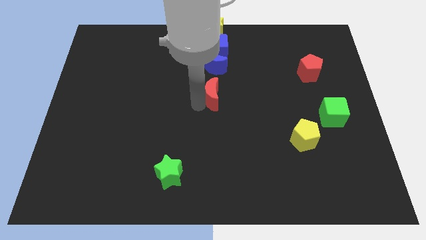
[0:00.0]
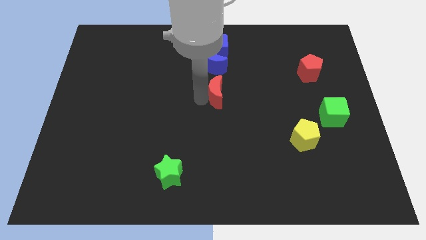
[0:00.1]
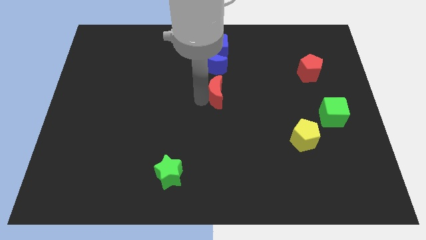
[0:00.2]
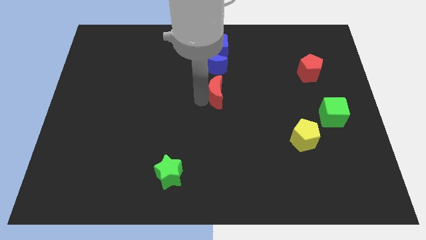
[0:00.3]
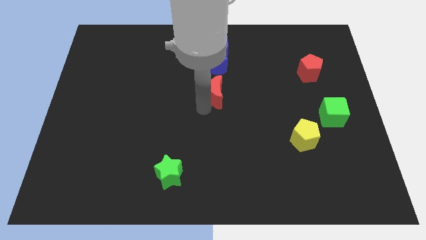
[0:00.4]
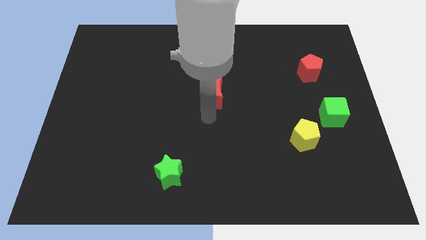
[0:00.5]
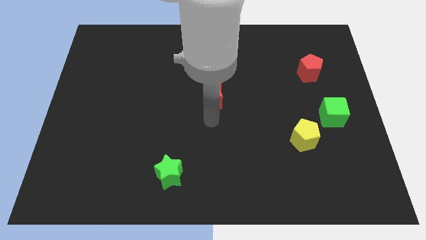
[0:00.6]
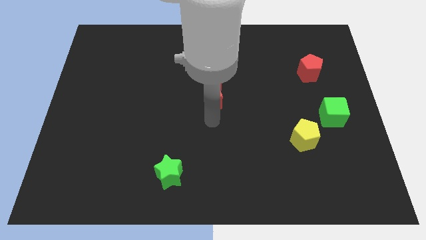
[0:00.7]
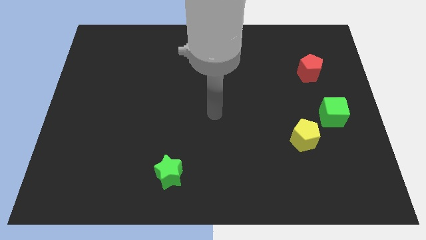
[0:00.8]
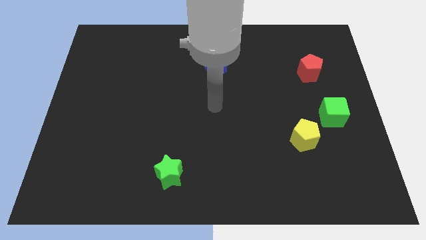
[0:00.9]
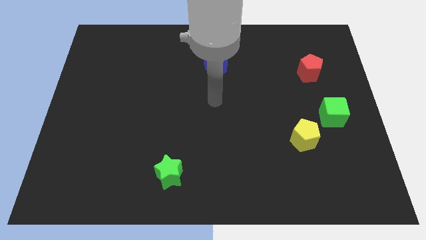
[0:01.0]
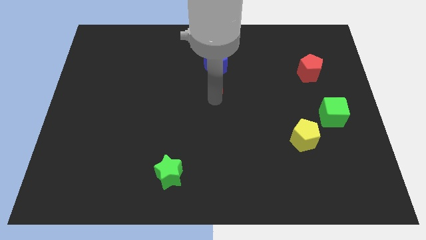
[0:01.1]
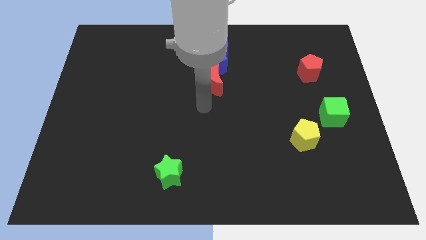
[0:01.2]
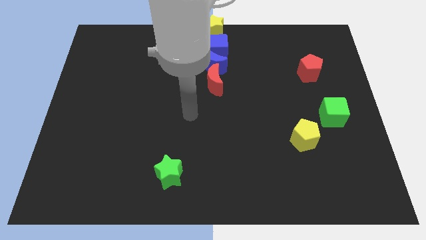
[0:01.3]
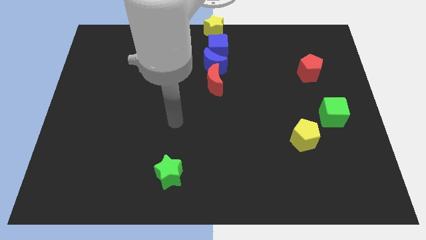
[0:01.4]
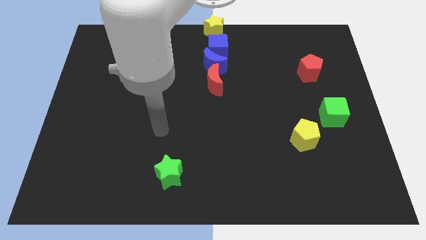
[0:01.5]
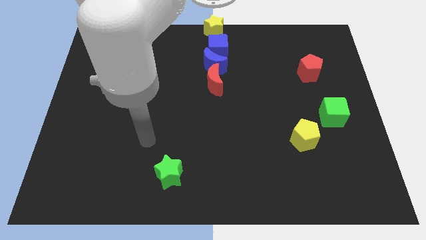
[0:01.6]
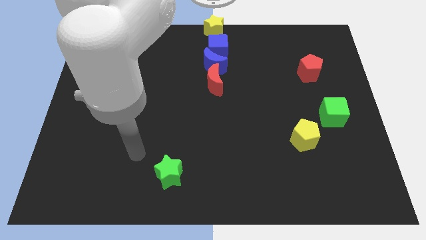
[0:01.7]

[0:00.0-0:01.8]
move the red moon into the blue moon

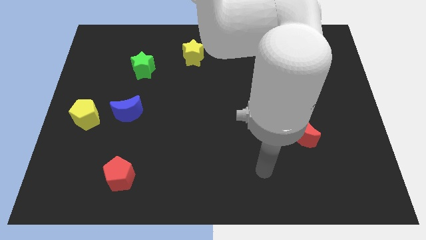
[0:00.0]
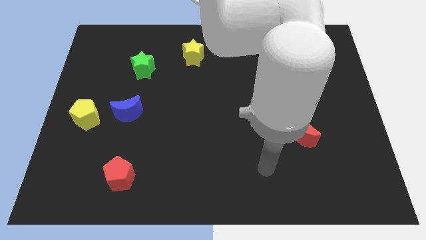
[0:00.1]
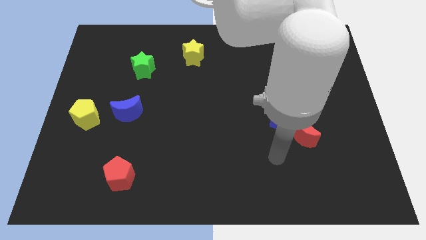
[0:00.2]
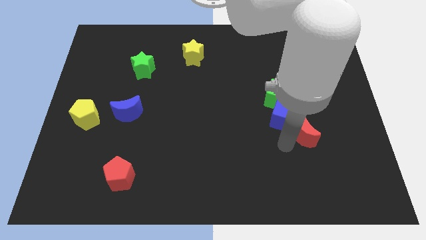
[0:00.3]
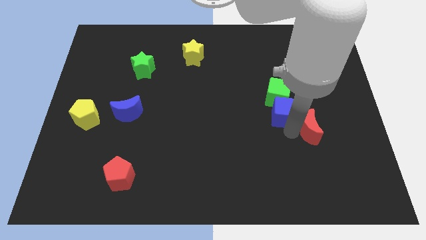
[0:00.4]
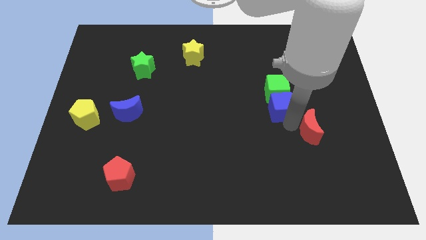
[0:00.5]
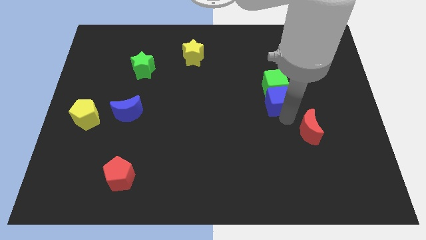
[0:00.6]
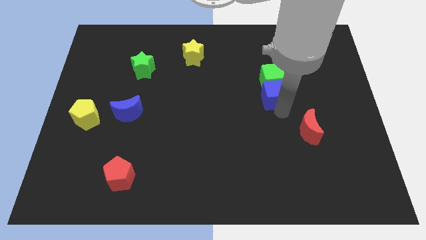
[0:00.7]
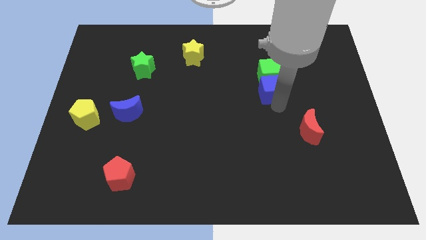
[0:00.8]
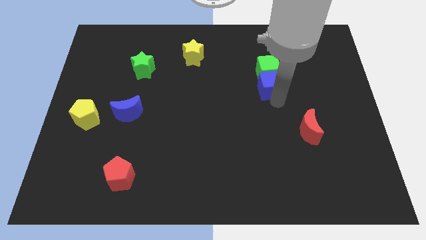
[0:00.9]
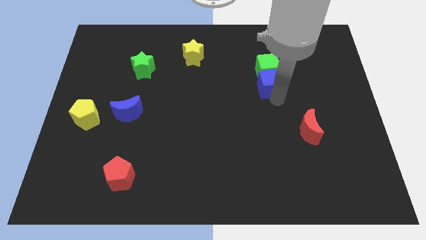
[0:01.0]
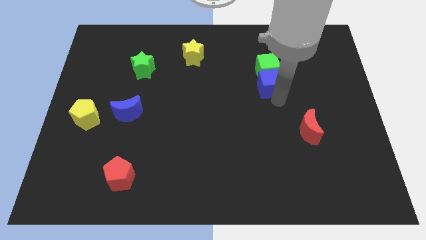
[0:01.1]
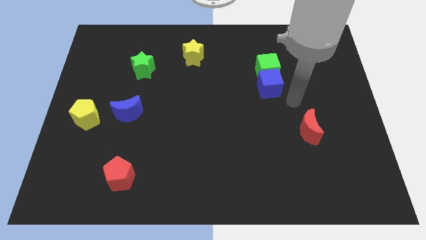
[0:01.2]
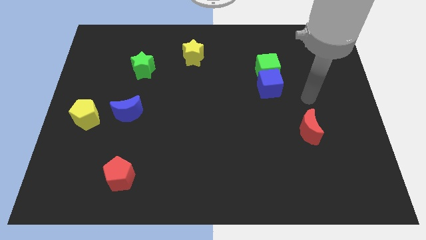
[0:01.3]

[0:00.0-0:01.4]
push the green cube and the blue cube towards top

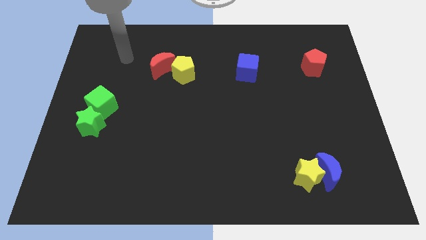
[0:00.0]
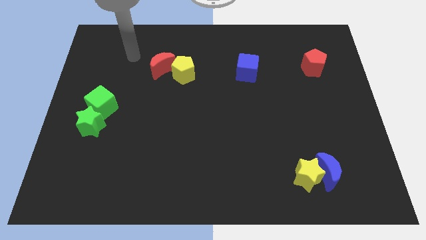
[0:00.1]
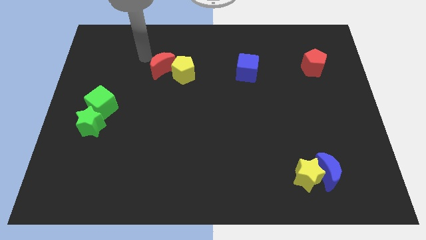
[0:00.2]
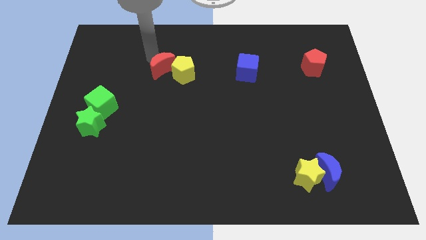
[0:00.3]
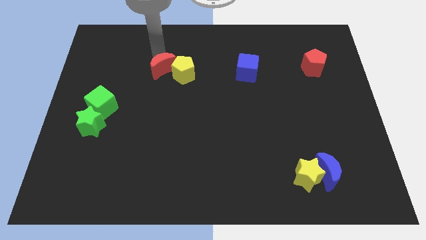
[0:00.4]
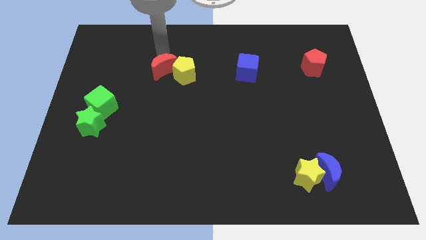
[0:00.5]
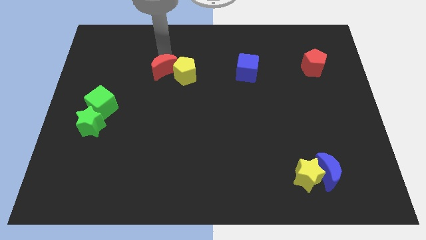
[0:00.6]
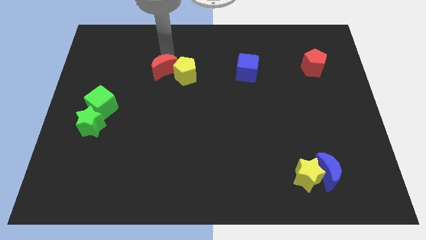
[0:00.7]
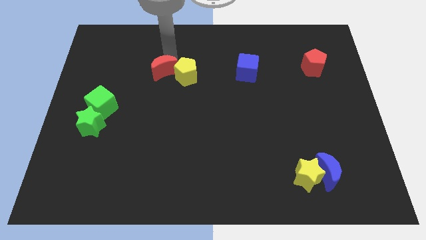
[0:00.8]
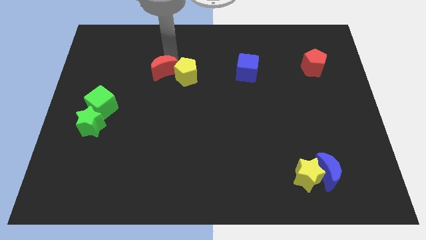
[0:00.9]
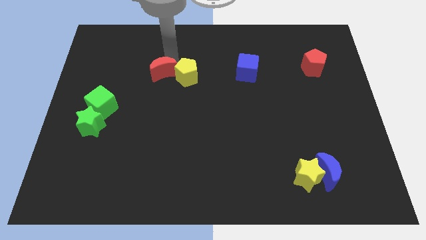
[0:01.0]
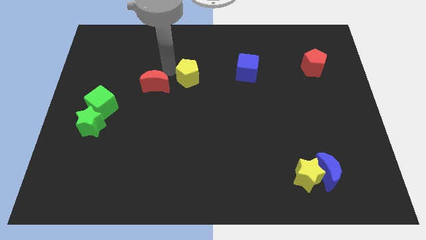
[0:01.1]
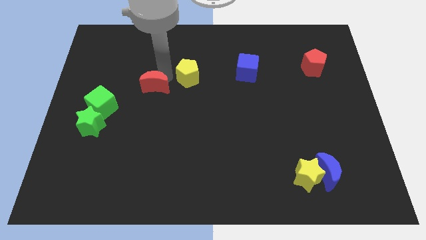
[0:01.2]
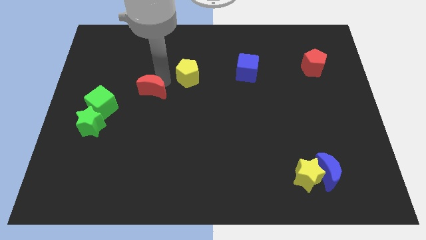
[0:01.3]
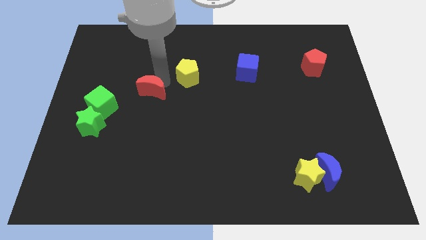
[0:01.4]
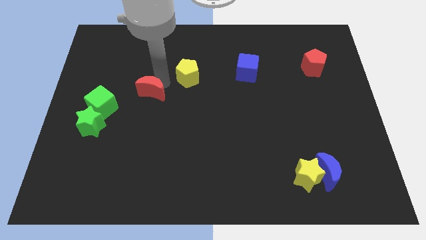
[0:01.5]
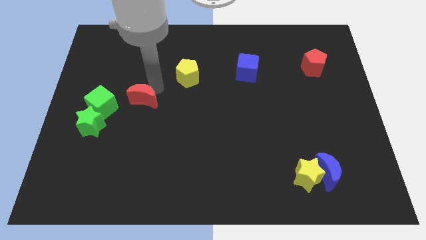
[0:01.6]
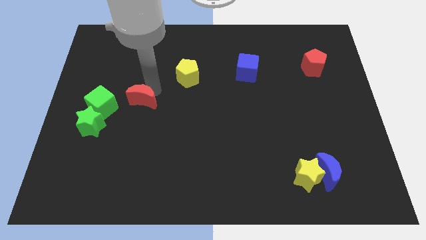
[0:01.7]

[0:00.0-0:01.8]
separate red moon from the yellow pentagon

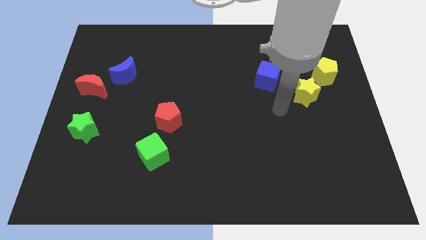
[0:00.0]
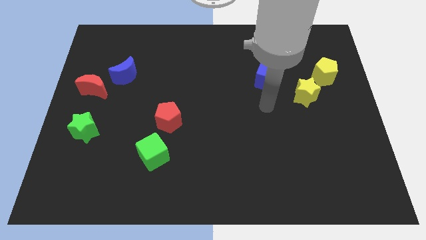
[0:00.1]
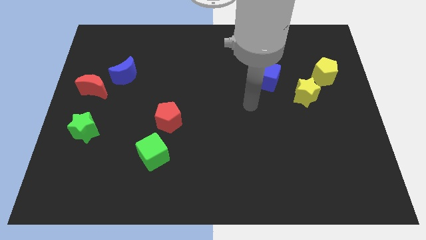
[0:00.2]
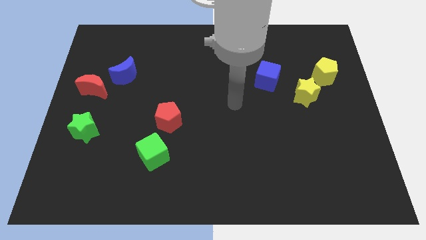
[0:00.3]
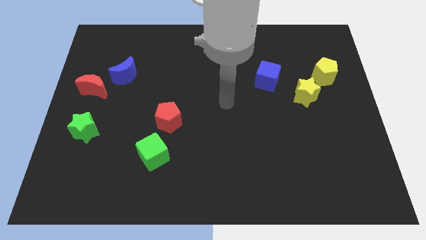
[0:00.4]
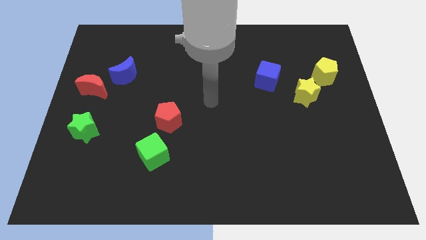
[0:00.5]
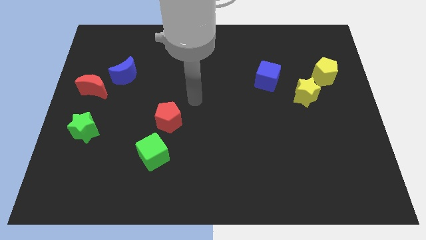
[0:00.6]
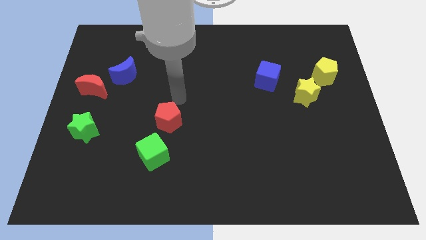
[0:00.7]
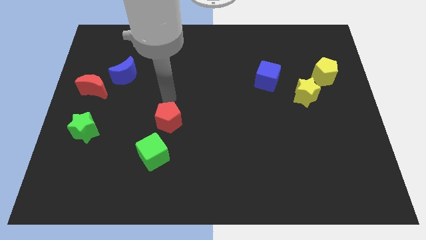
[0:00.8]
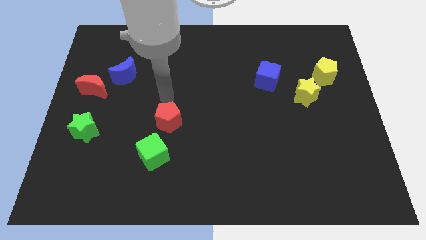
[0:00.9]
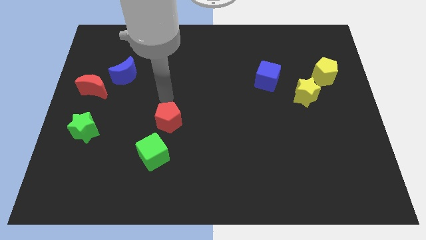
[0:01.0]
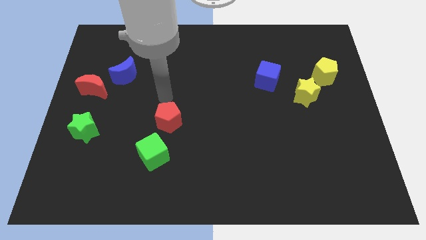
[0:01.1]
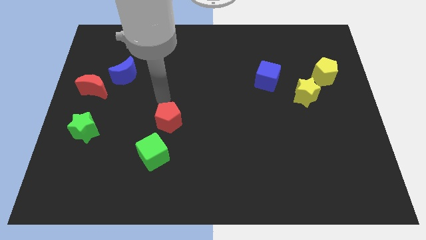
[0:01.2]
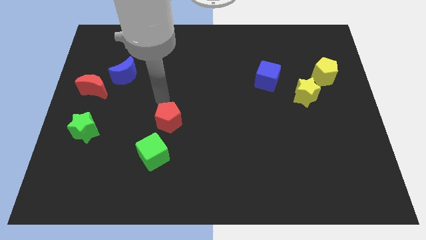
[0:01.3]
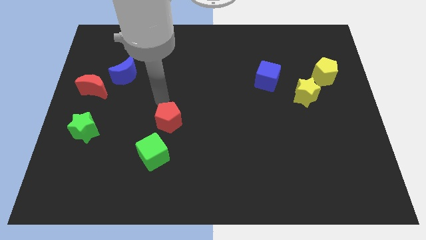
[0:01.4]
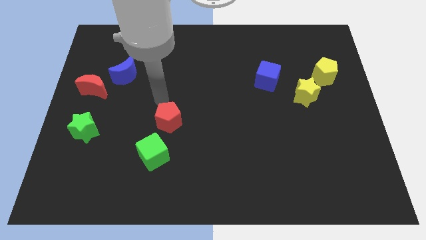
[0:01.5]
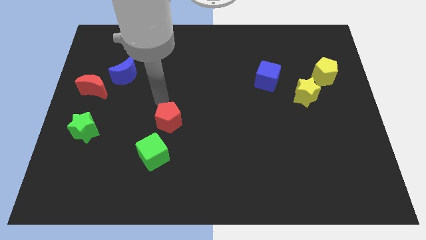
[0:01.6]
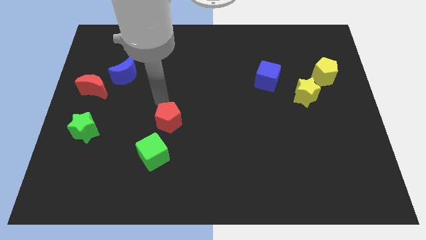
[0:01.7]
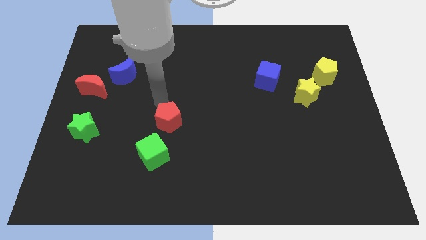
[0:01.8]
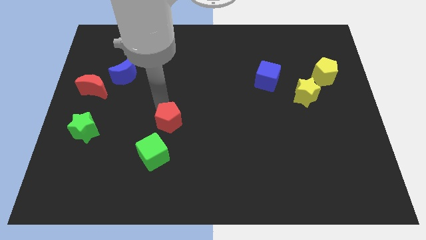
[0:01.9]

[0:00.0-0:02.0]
point your arm towards the top left side of the red pentagon

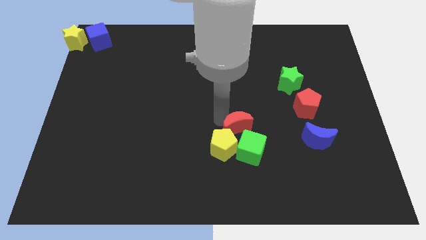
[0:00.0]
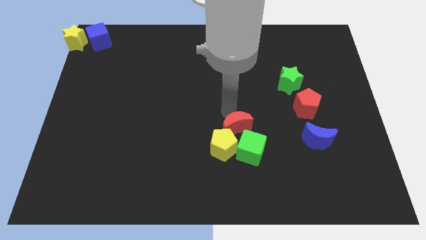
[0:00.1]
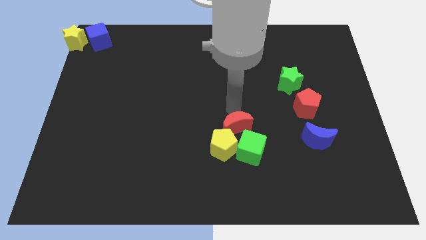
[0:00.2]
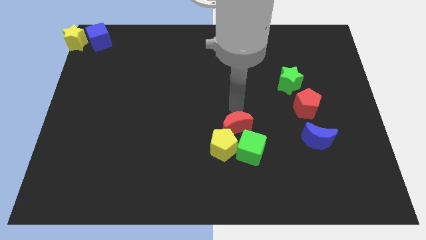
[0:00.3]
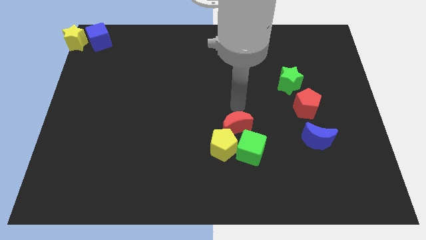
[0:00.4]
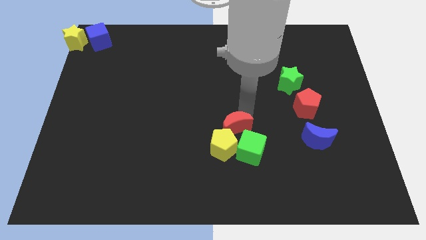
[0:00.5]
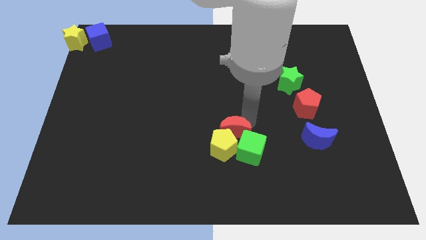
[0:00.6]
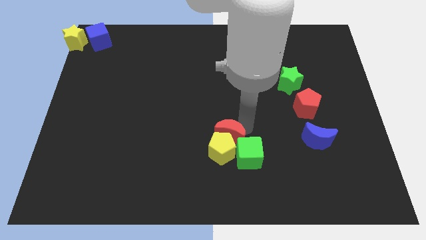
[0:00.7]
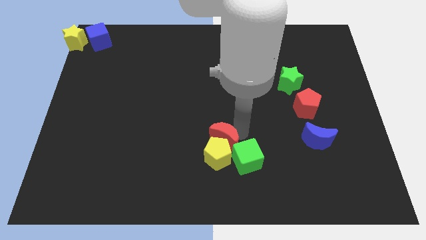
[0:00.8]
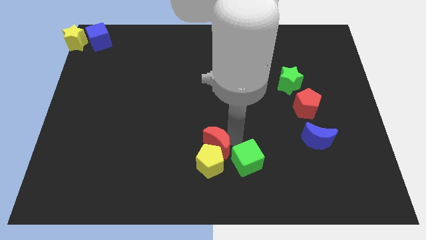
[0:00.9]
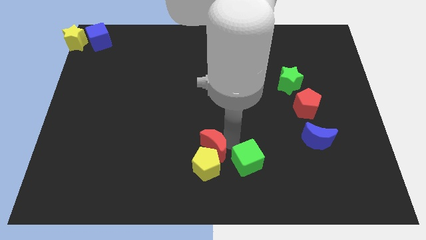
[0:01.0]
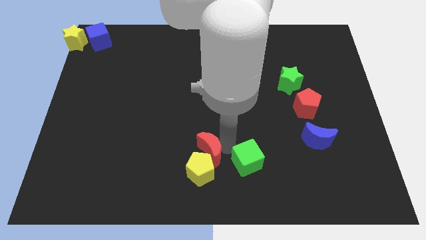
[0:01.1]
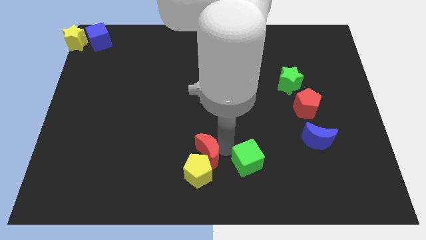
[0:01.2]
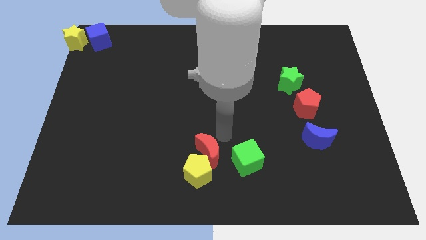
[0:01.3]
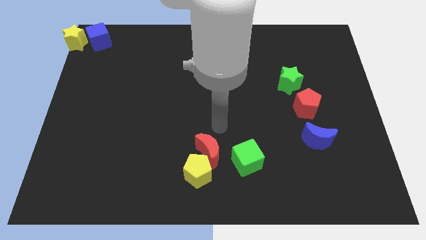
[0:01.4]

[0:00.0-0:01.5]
move the red crescent into the yellow pentagon

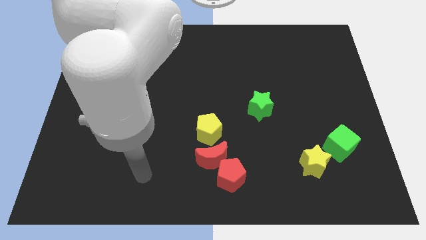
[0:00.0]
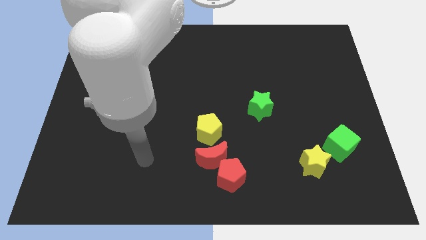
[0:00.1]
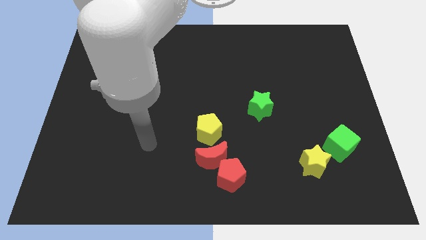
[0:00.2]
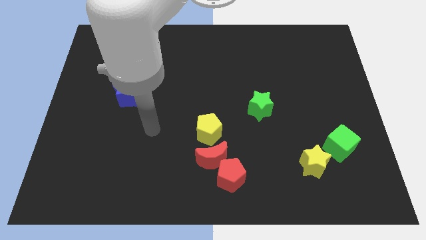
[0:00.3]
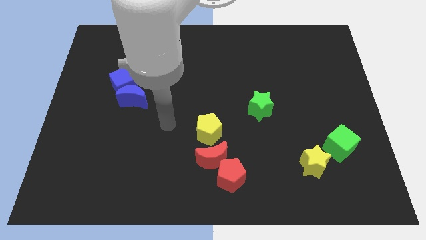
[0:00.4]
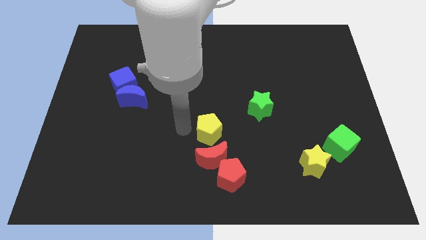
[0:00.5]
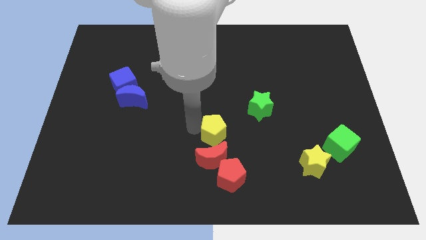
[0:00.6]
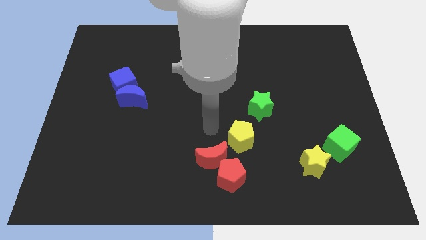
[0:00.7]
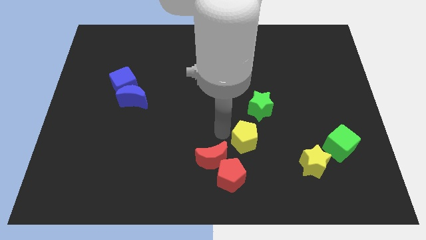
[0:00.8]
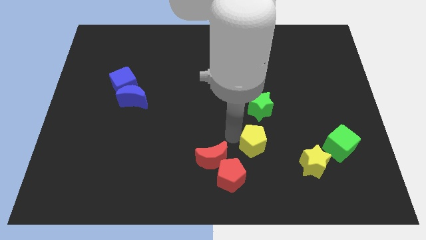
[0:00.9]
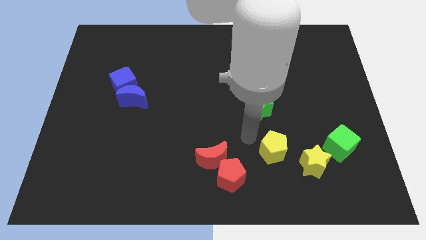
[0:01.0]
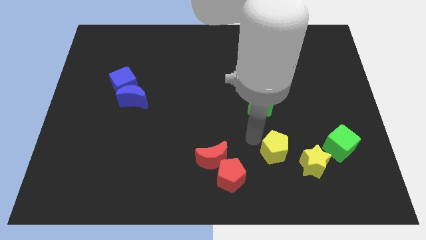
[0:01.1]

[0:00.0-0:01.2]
move yellow pentagon towards green star
